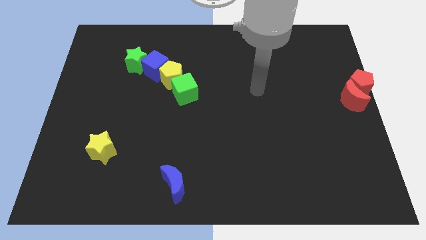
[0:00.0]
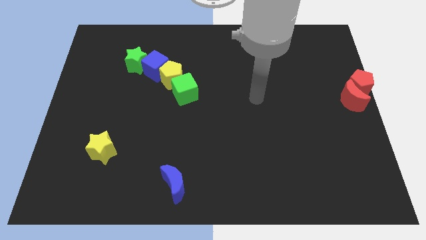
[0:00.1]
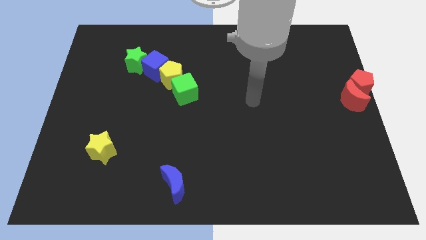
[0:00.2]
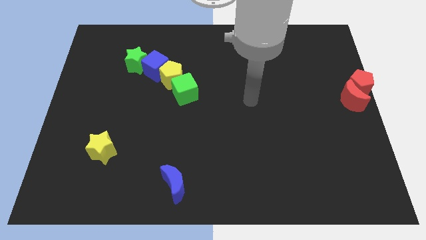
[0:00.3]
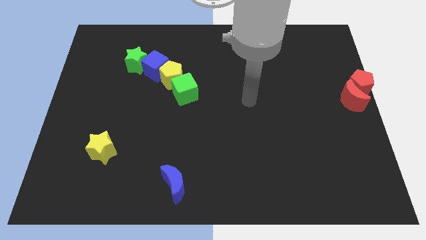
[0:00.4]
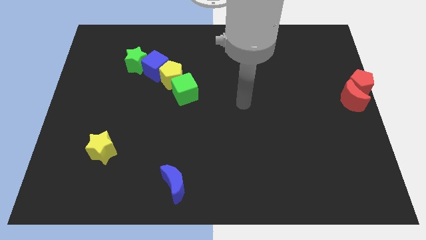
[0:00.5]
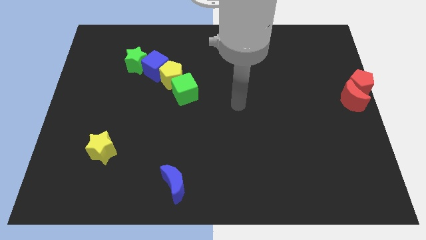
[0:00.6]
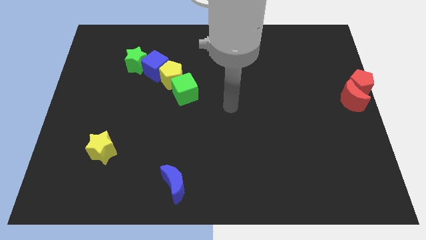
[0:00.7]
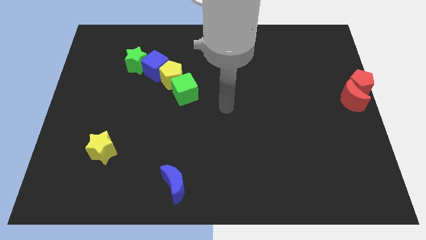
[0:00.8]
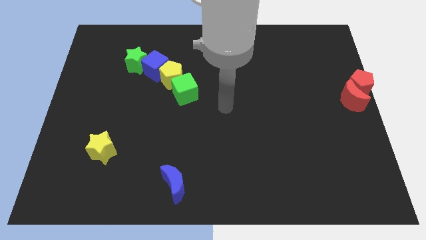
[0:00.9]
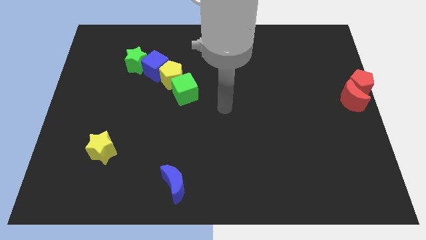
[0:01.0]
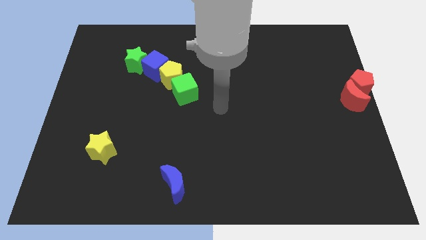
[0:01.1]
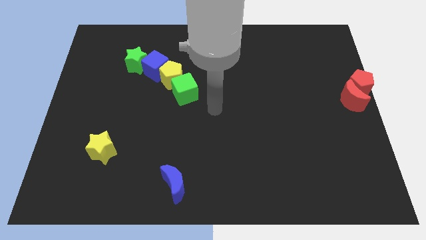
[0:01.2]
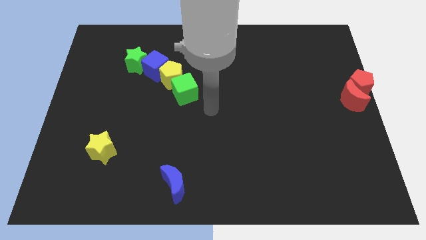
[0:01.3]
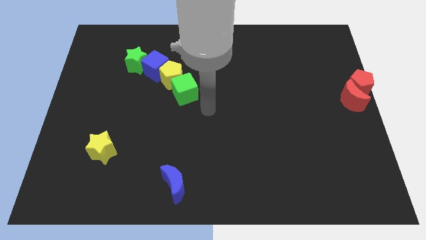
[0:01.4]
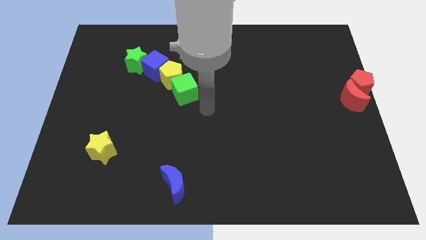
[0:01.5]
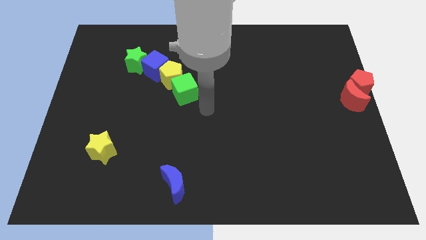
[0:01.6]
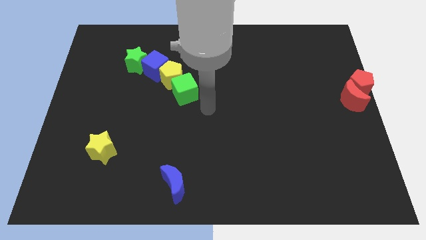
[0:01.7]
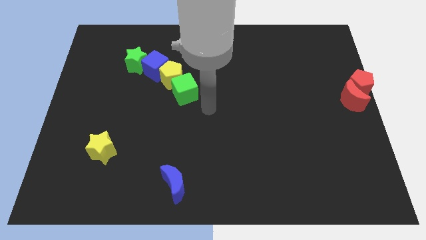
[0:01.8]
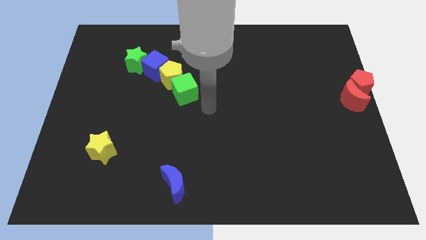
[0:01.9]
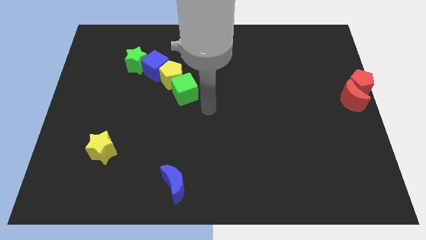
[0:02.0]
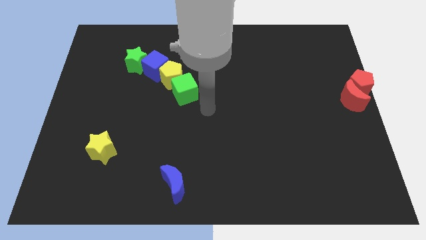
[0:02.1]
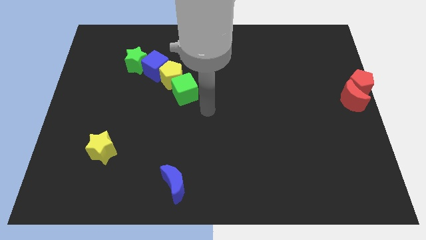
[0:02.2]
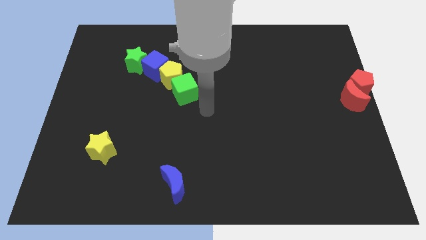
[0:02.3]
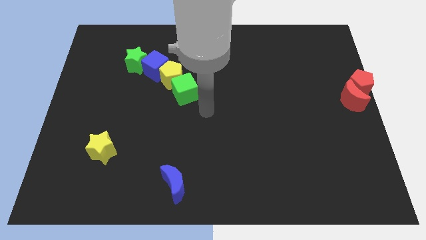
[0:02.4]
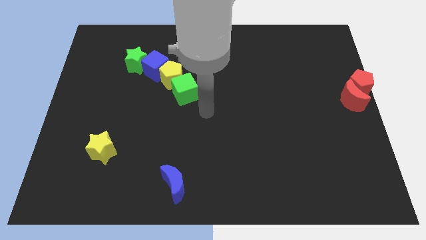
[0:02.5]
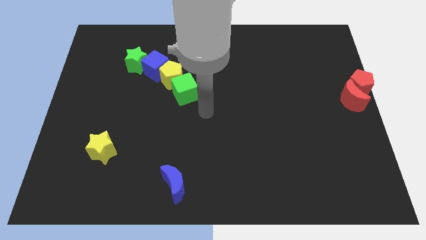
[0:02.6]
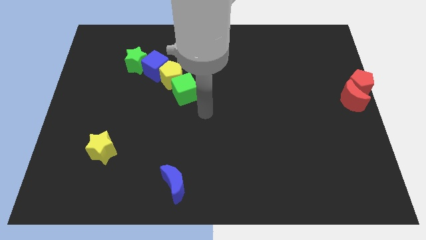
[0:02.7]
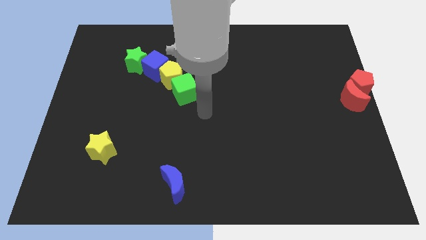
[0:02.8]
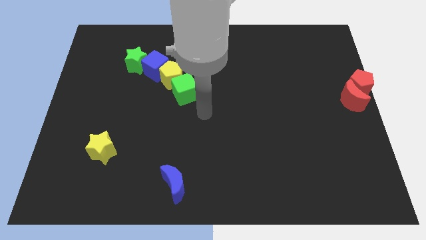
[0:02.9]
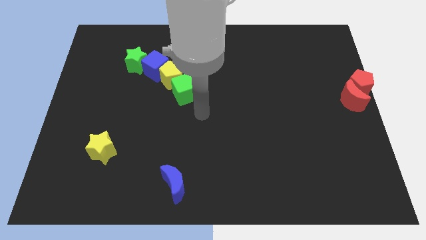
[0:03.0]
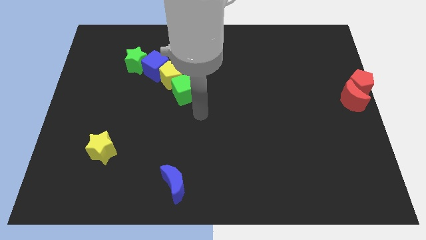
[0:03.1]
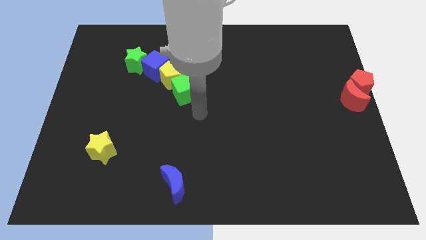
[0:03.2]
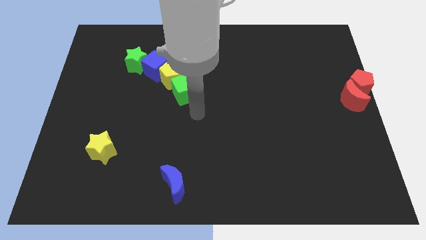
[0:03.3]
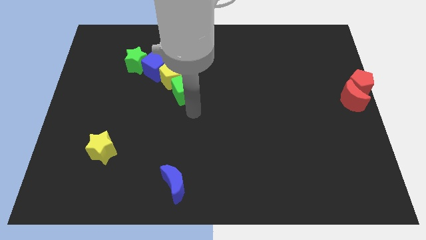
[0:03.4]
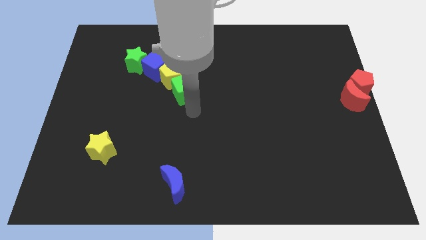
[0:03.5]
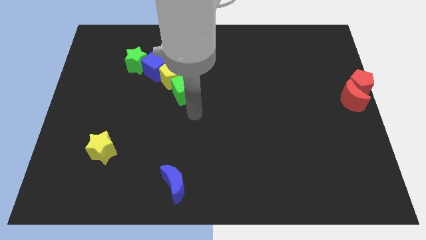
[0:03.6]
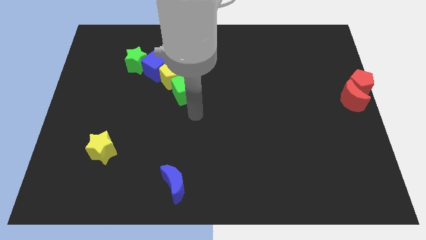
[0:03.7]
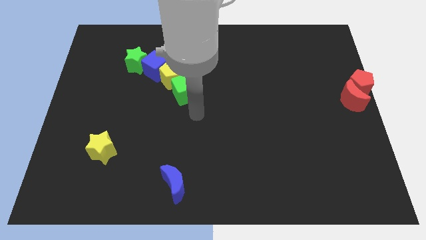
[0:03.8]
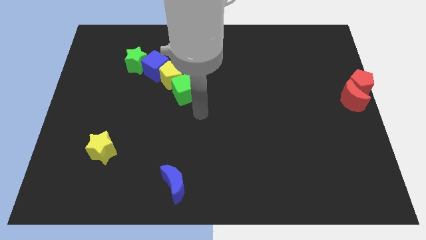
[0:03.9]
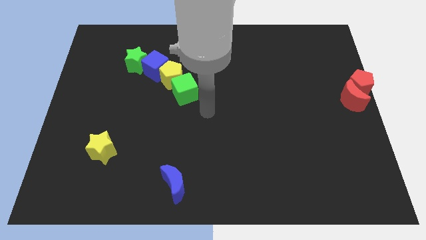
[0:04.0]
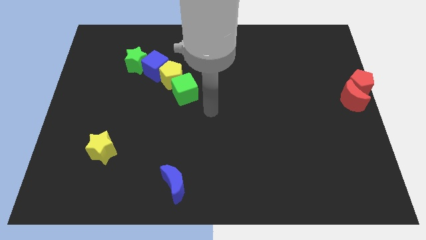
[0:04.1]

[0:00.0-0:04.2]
move your arm towards the green cube

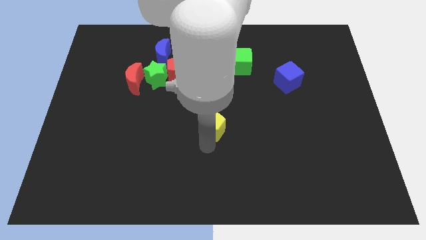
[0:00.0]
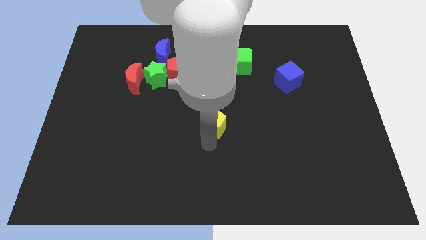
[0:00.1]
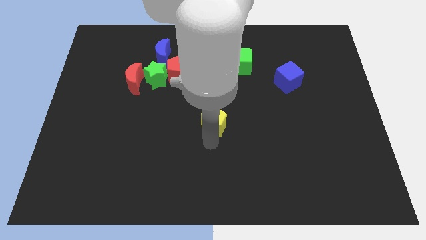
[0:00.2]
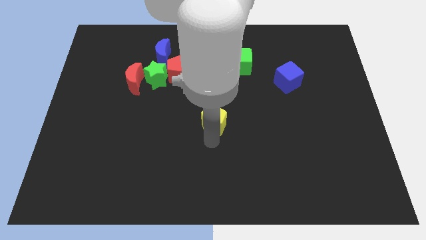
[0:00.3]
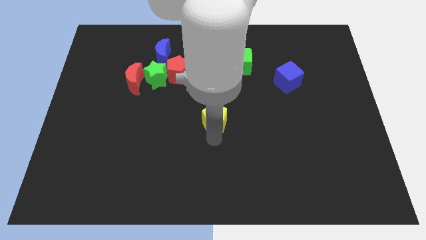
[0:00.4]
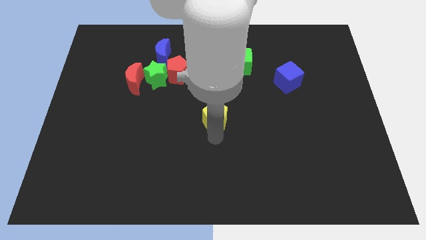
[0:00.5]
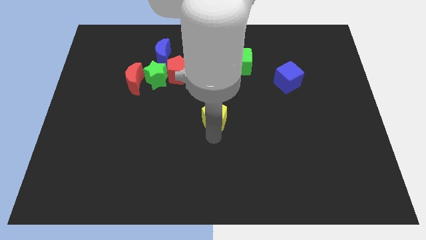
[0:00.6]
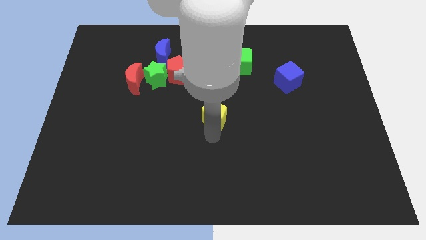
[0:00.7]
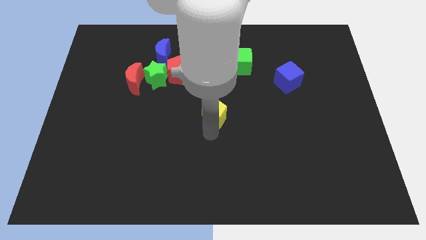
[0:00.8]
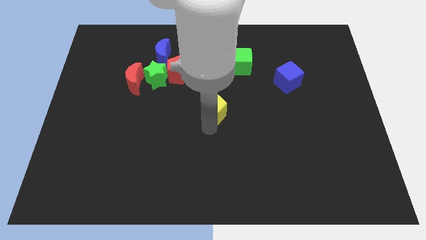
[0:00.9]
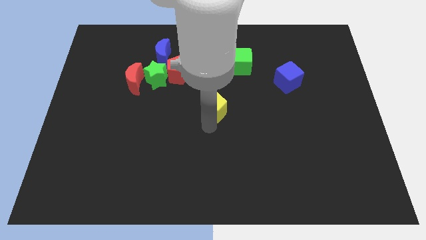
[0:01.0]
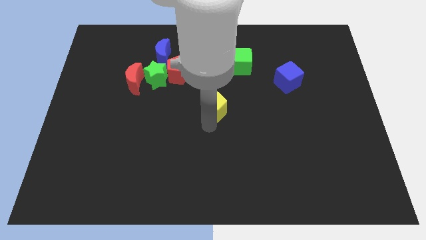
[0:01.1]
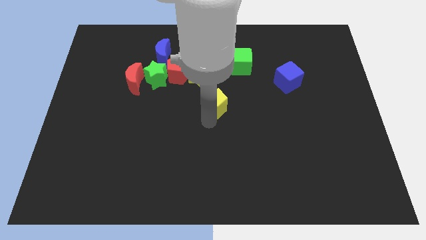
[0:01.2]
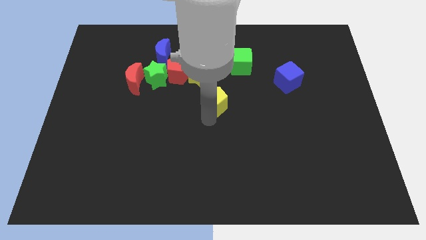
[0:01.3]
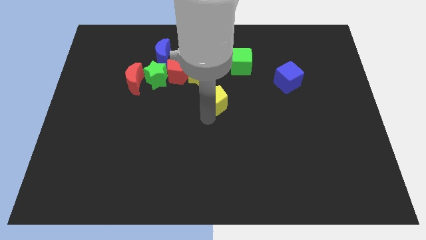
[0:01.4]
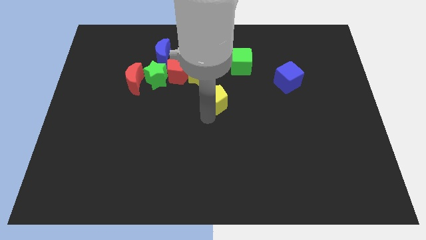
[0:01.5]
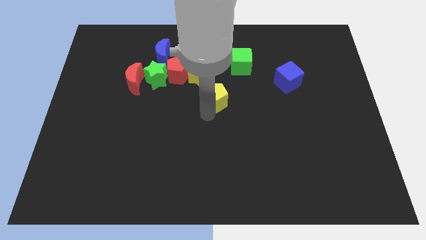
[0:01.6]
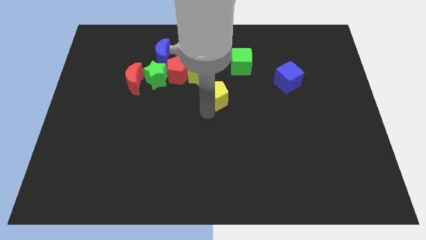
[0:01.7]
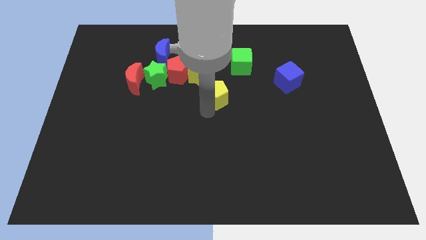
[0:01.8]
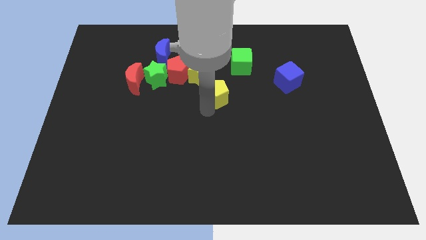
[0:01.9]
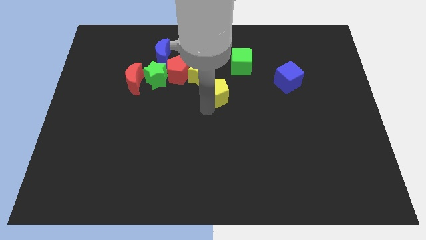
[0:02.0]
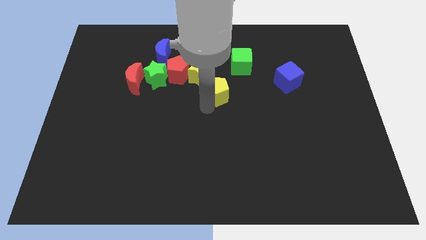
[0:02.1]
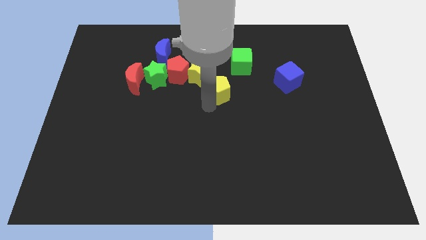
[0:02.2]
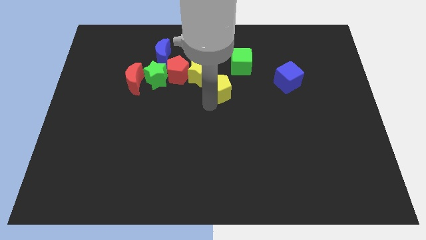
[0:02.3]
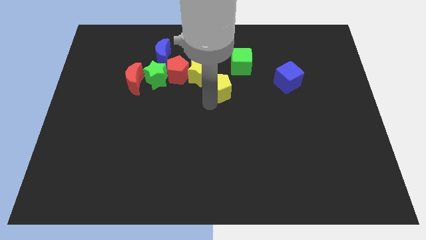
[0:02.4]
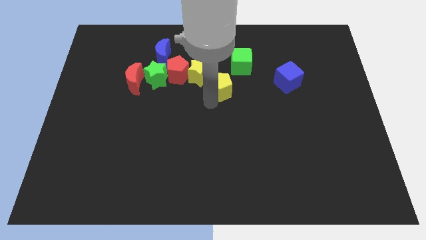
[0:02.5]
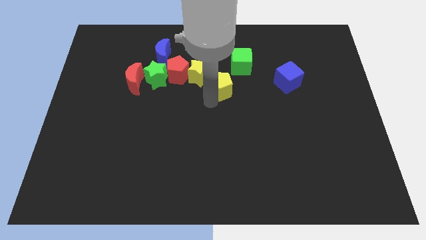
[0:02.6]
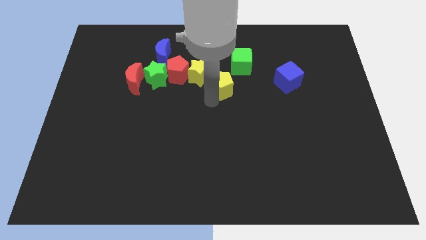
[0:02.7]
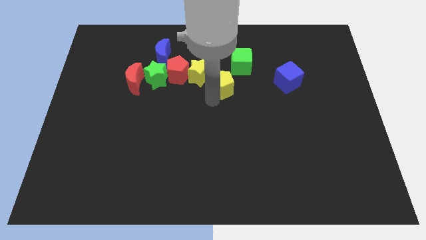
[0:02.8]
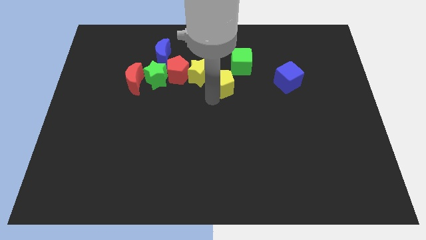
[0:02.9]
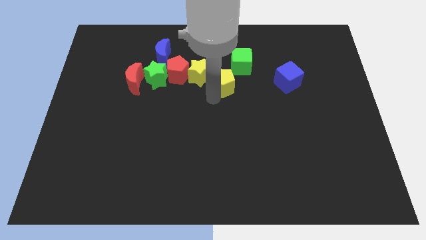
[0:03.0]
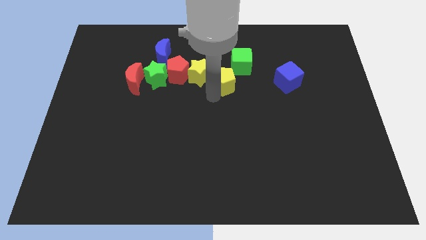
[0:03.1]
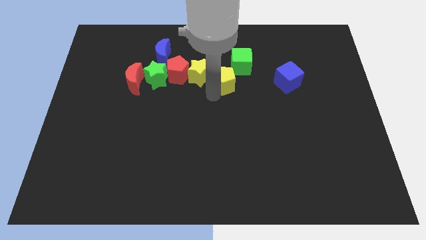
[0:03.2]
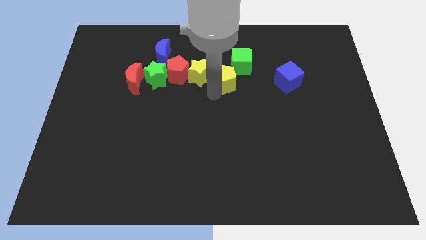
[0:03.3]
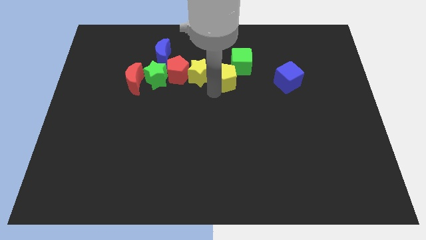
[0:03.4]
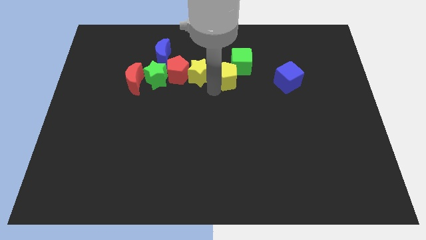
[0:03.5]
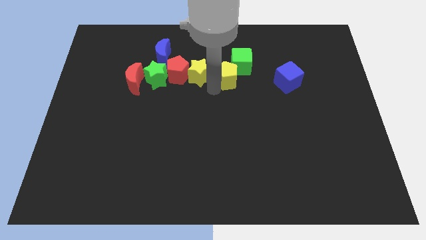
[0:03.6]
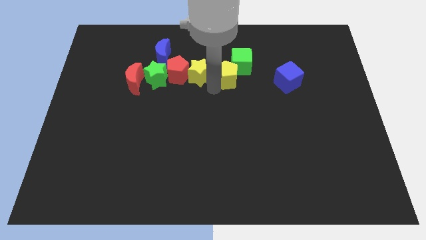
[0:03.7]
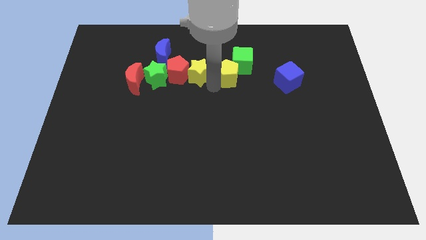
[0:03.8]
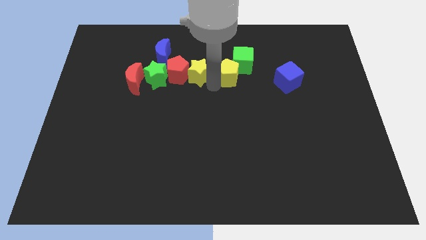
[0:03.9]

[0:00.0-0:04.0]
place the yellow pentagon to the bottom left side of the green cube

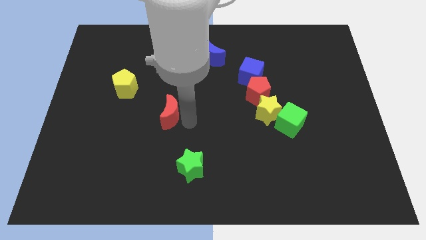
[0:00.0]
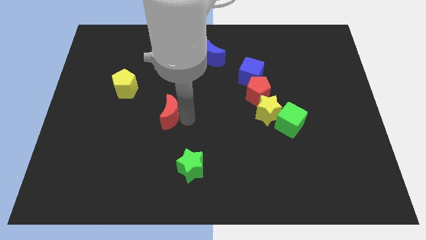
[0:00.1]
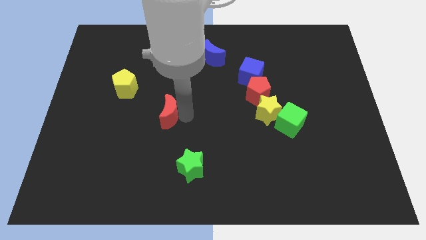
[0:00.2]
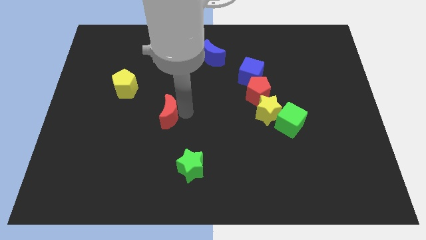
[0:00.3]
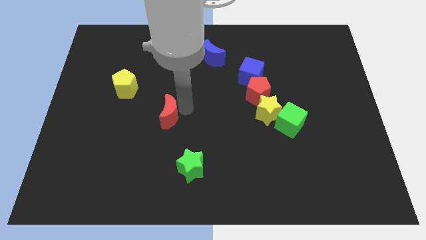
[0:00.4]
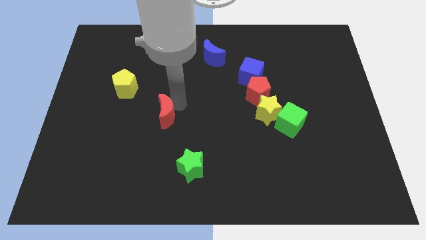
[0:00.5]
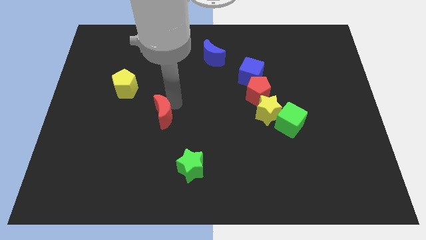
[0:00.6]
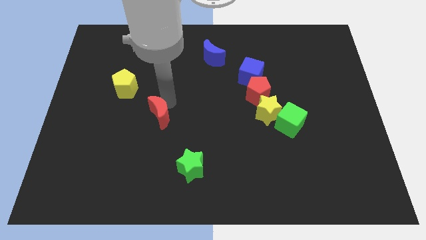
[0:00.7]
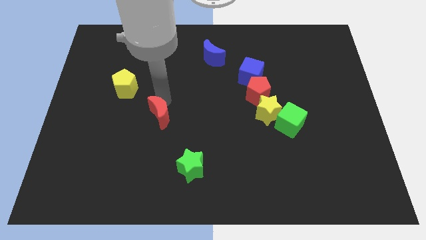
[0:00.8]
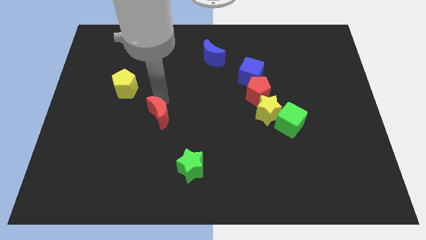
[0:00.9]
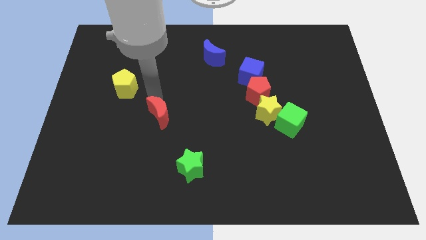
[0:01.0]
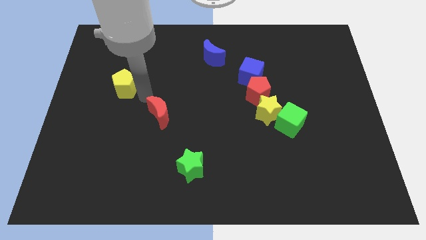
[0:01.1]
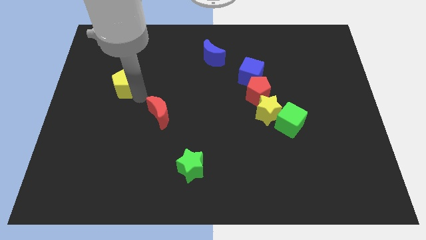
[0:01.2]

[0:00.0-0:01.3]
turn the red crescent towards the bottom side of the board
